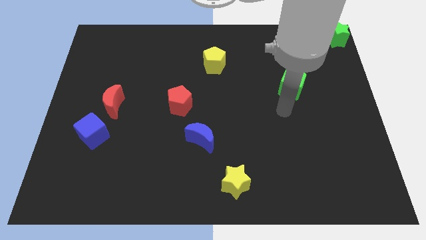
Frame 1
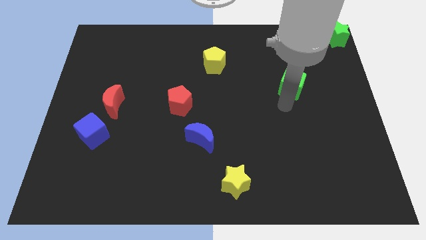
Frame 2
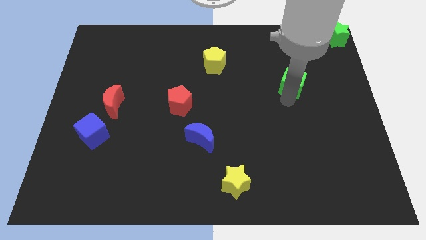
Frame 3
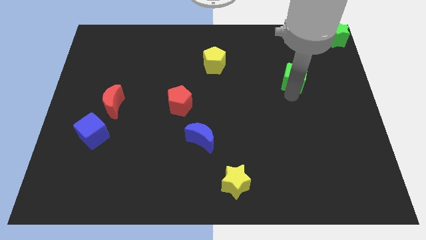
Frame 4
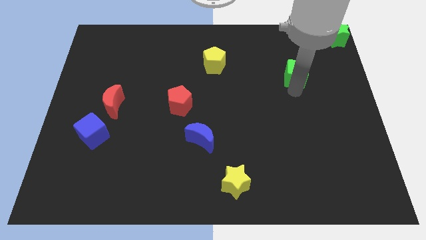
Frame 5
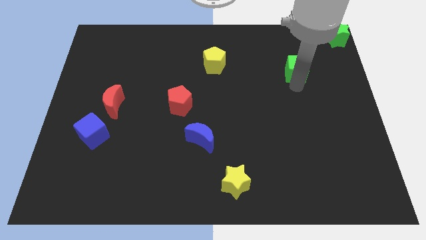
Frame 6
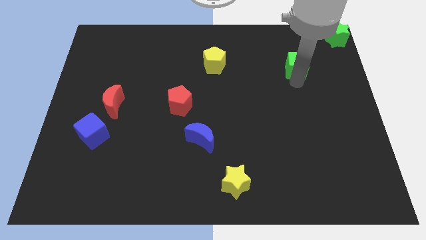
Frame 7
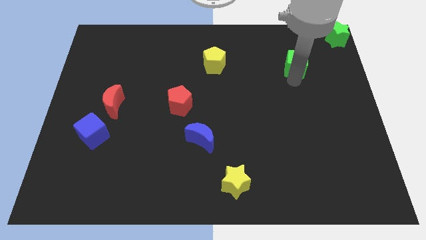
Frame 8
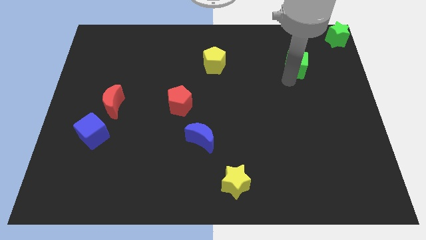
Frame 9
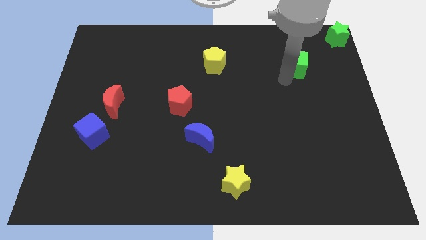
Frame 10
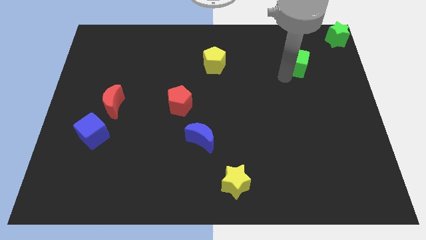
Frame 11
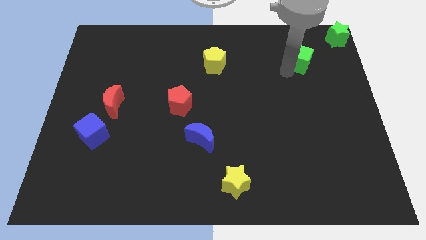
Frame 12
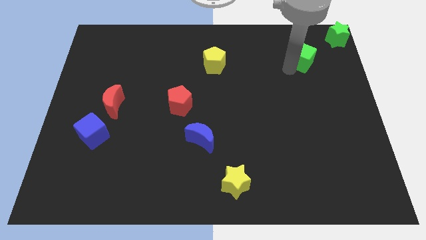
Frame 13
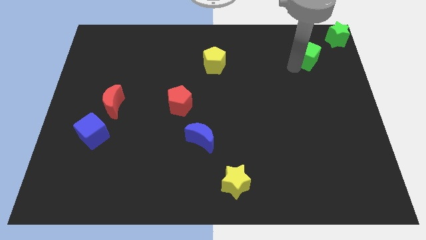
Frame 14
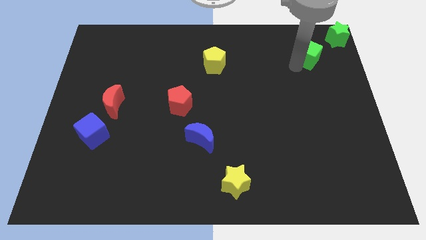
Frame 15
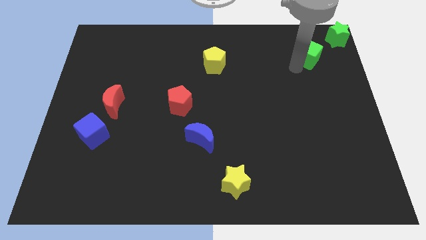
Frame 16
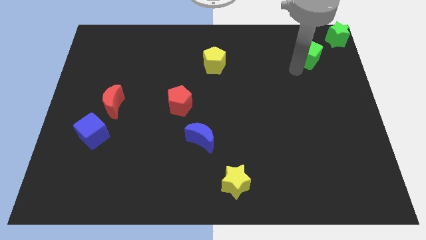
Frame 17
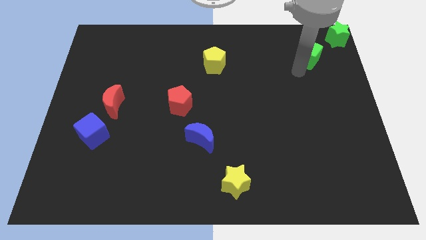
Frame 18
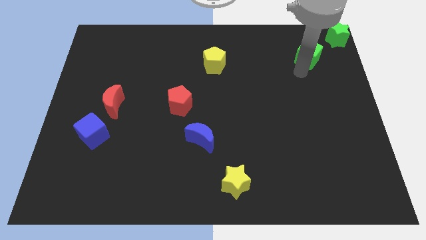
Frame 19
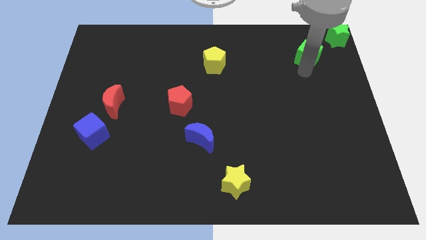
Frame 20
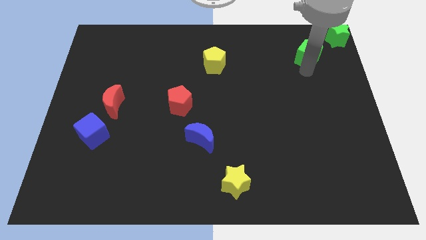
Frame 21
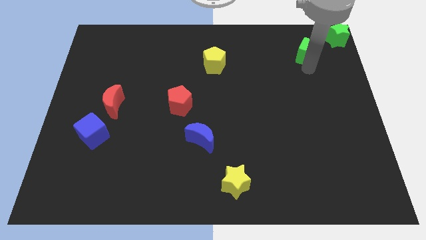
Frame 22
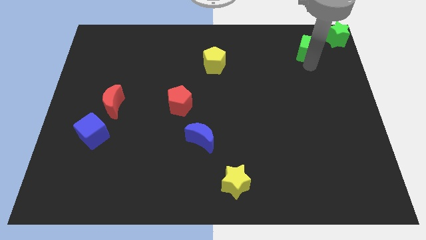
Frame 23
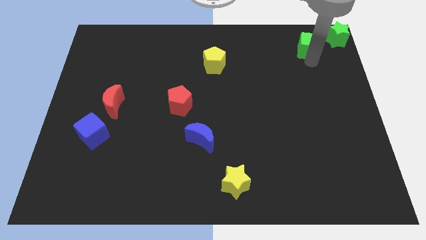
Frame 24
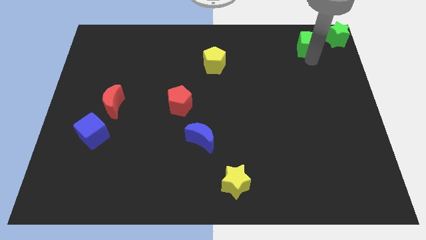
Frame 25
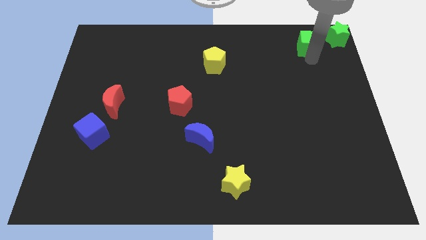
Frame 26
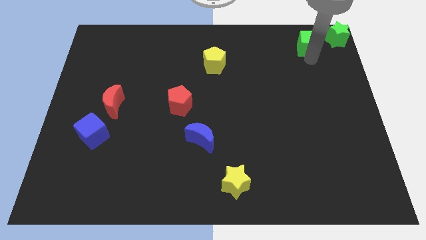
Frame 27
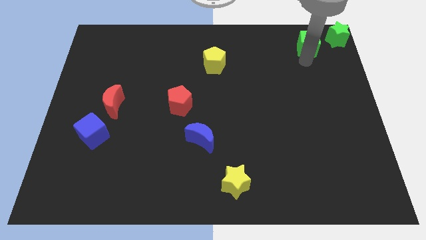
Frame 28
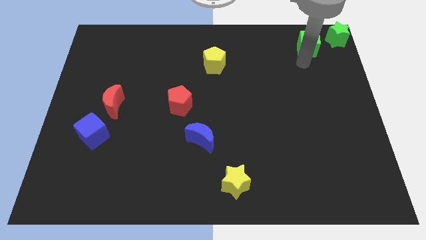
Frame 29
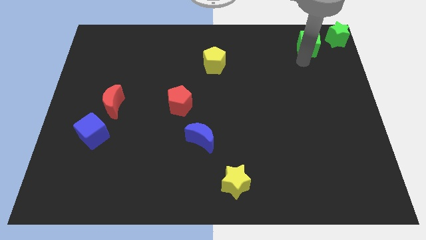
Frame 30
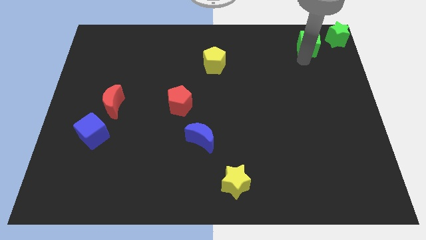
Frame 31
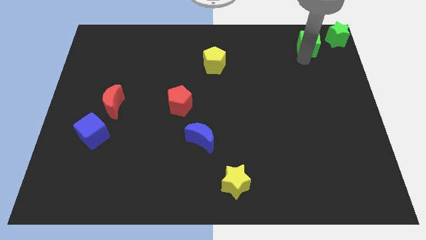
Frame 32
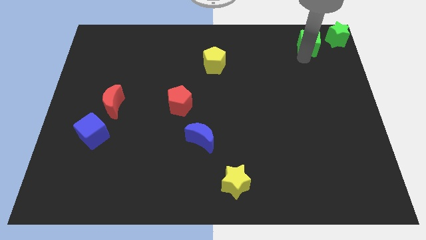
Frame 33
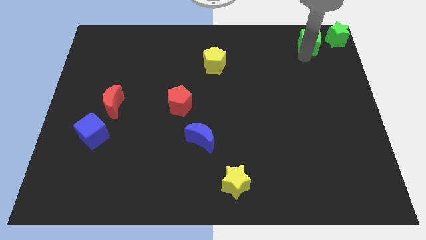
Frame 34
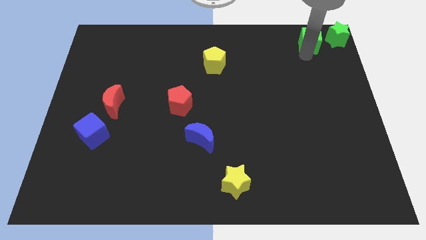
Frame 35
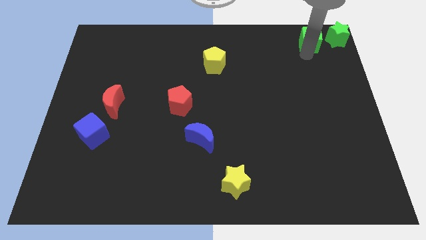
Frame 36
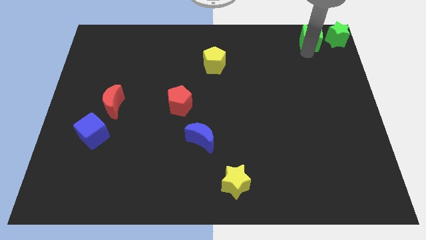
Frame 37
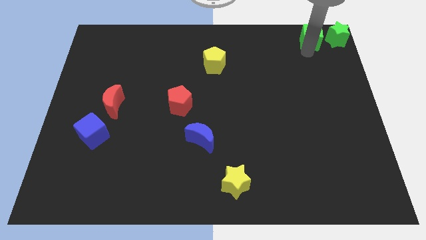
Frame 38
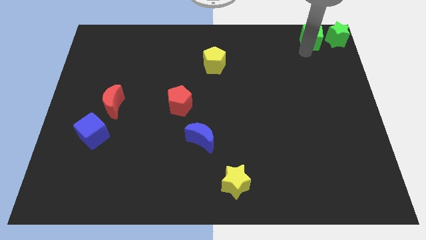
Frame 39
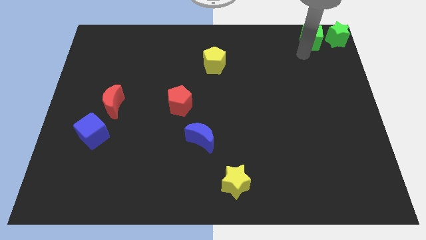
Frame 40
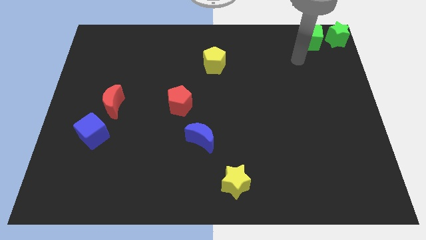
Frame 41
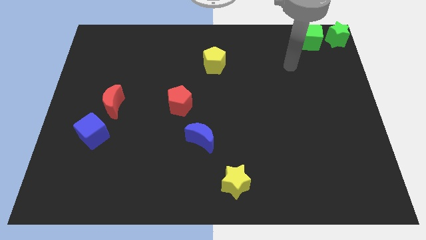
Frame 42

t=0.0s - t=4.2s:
slide the green cube parallel left to the green star

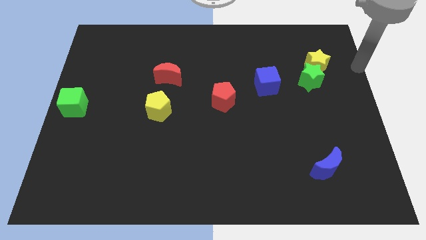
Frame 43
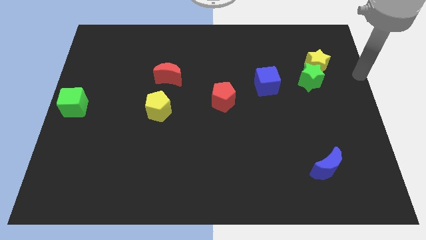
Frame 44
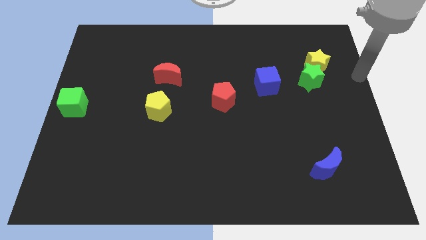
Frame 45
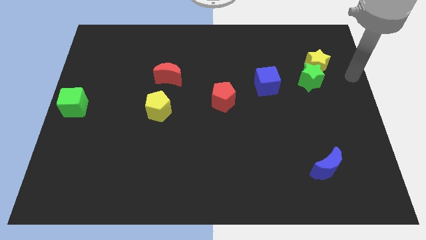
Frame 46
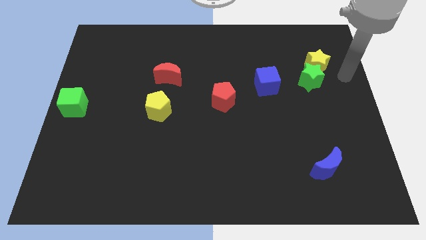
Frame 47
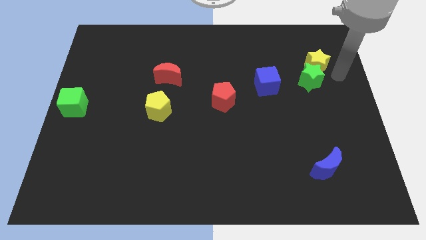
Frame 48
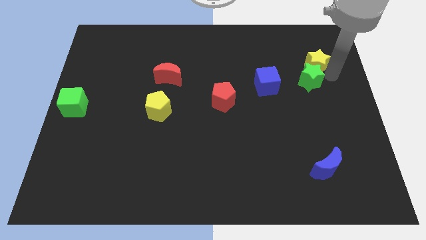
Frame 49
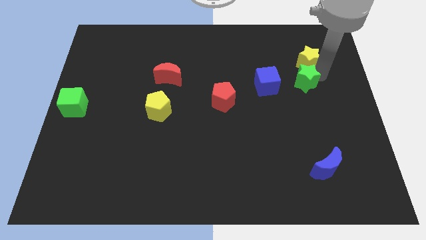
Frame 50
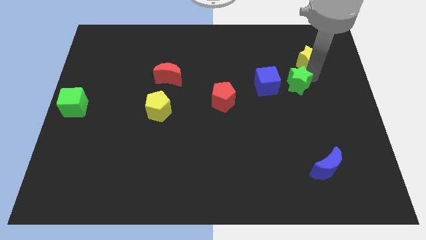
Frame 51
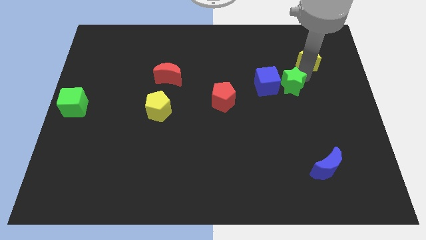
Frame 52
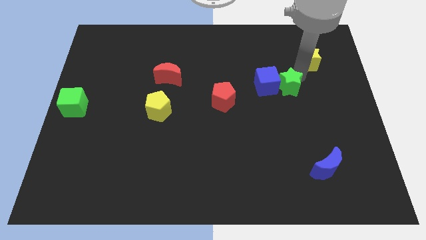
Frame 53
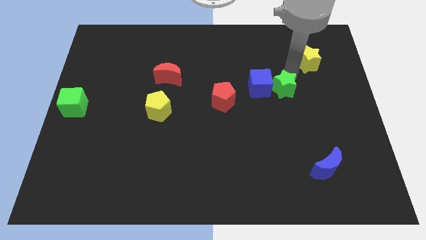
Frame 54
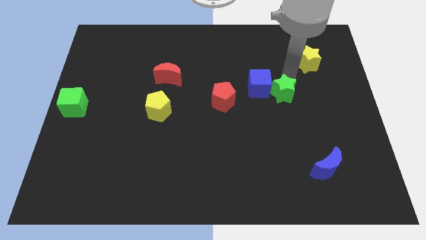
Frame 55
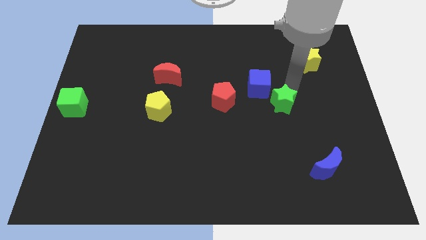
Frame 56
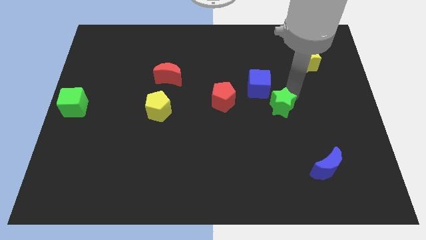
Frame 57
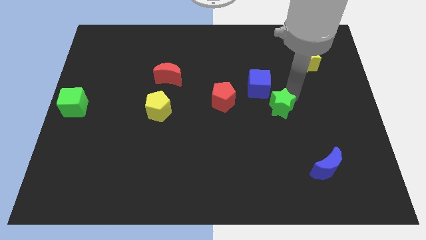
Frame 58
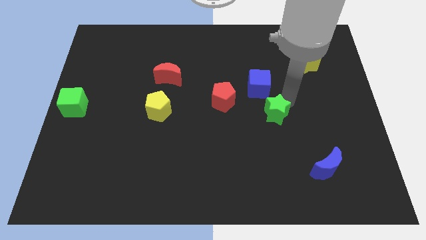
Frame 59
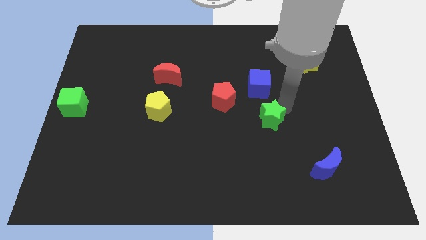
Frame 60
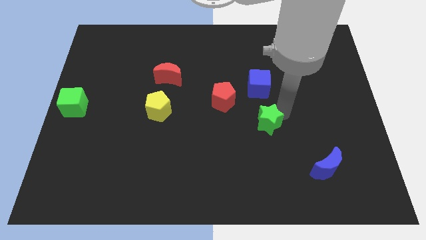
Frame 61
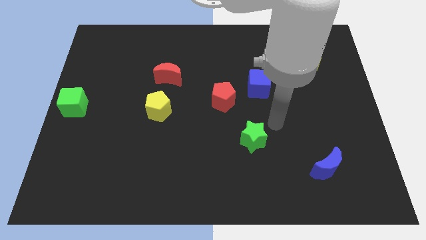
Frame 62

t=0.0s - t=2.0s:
place the green star below the blue cube

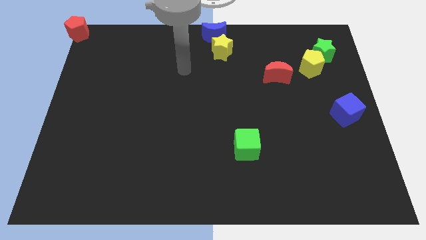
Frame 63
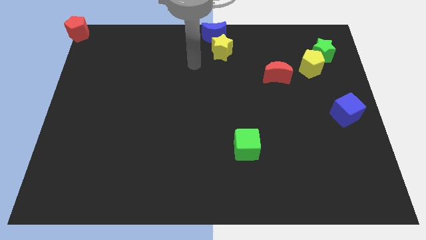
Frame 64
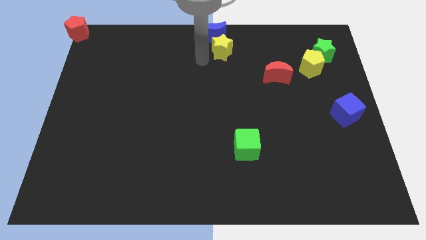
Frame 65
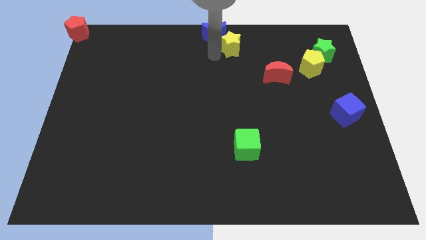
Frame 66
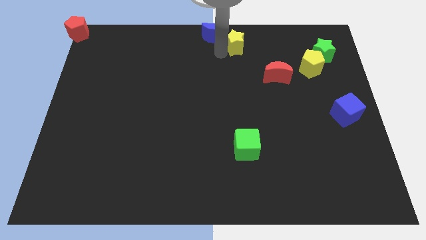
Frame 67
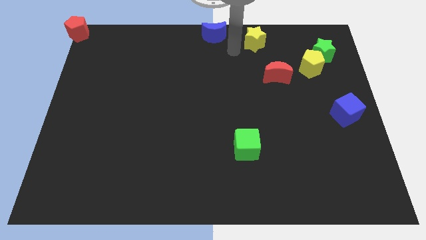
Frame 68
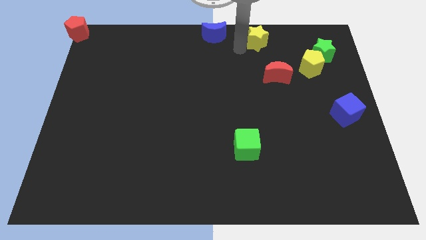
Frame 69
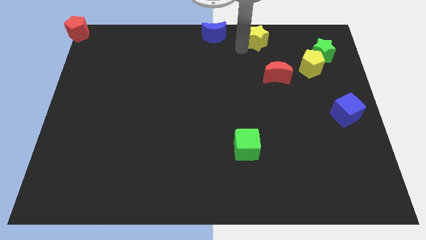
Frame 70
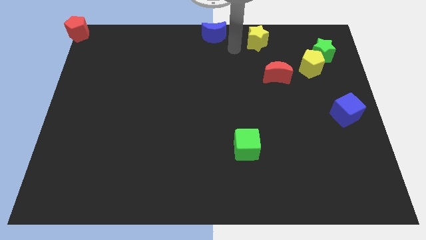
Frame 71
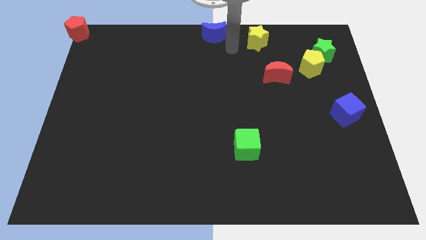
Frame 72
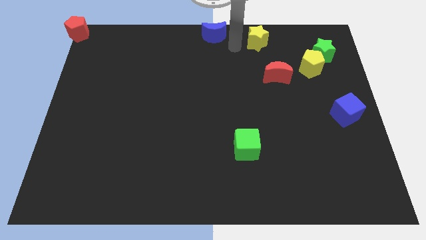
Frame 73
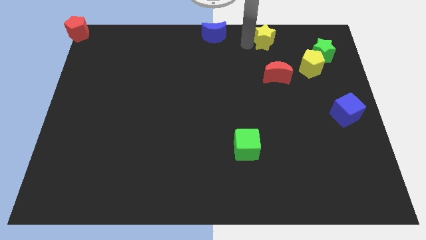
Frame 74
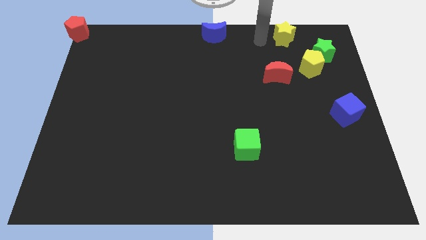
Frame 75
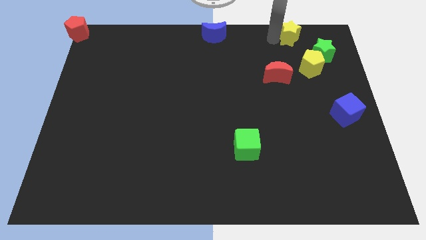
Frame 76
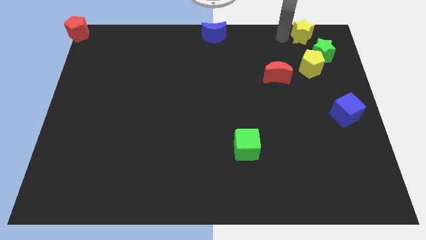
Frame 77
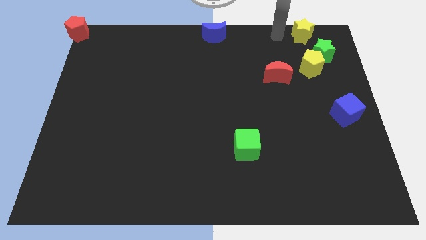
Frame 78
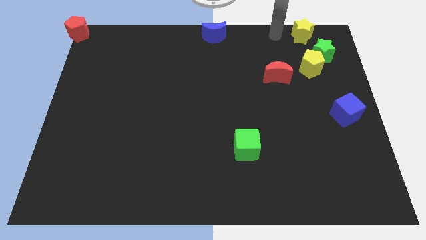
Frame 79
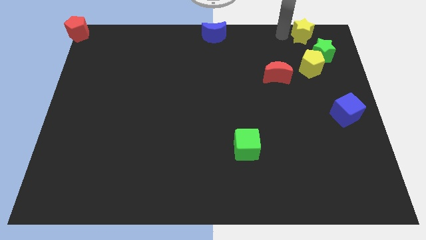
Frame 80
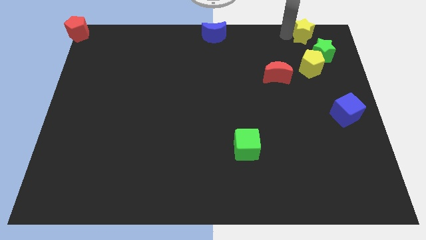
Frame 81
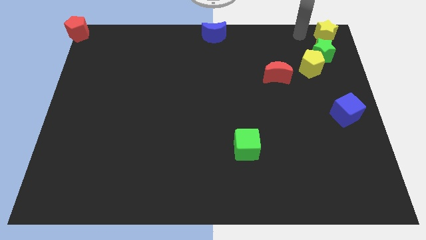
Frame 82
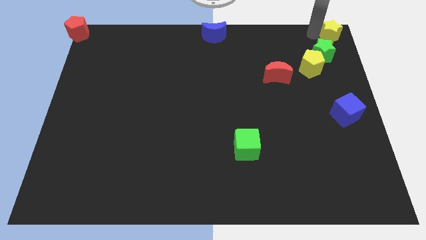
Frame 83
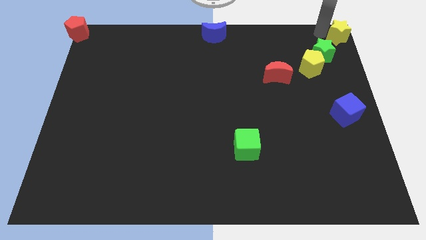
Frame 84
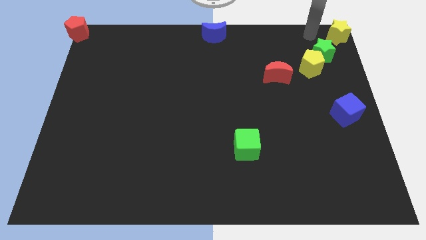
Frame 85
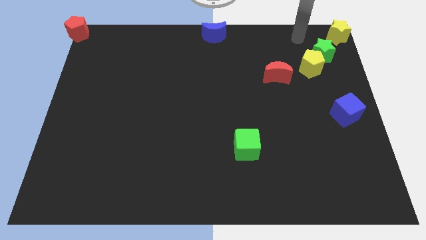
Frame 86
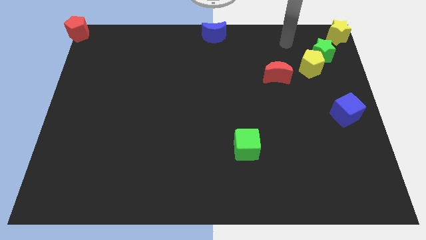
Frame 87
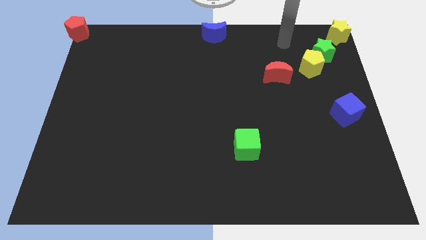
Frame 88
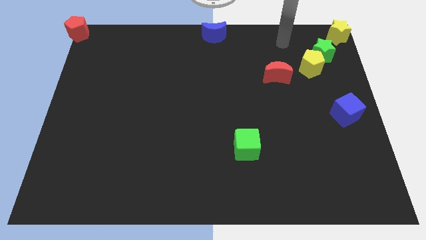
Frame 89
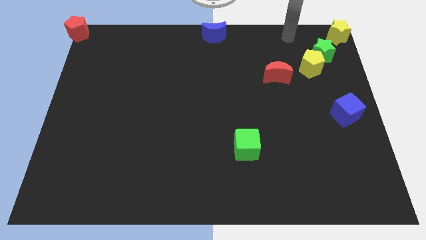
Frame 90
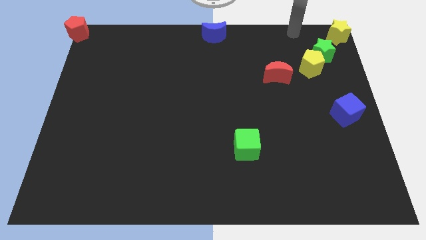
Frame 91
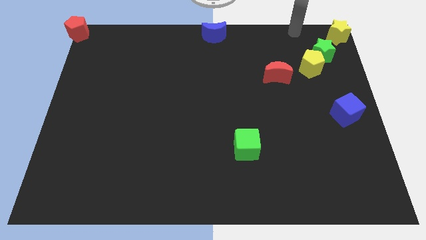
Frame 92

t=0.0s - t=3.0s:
move the yellow star to the top right corner of the board
